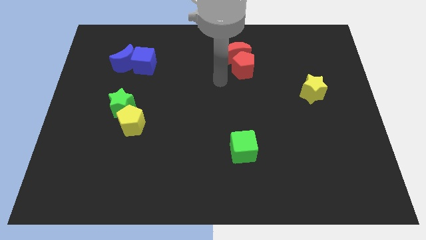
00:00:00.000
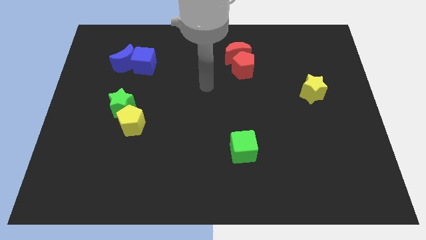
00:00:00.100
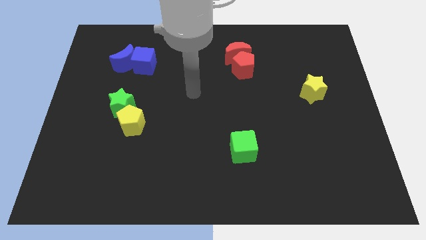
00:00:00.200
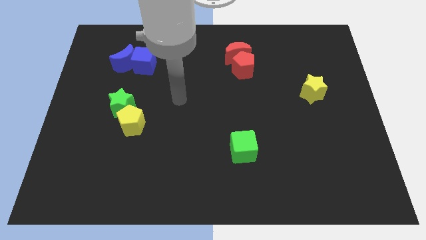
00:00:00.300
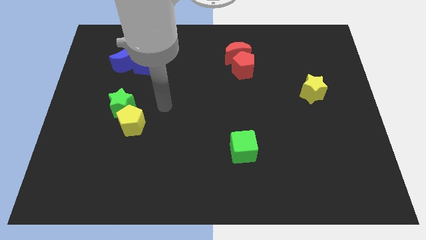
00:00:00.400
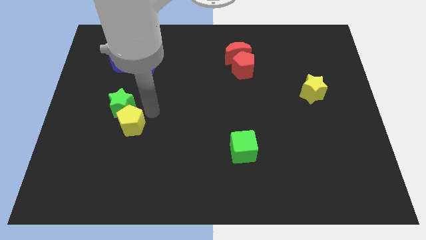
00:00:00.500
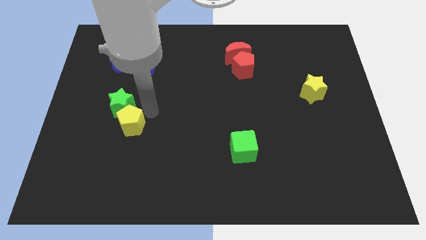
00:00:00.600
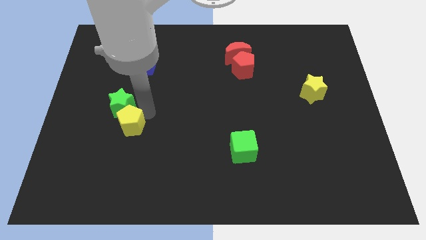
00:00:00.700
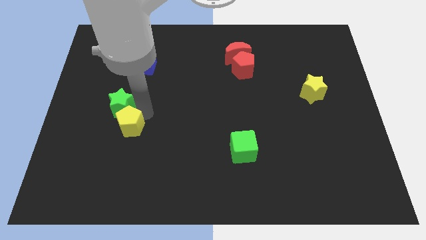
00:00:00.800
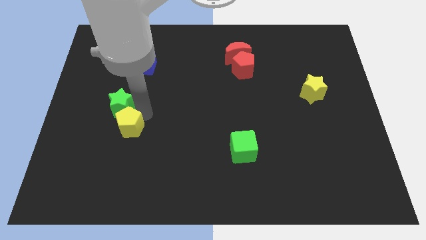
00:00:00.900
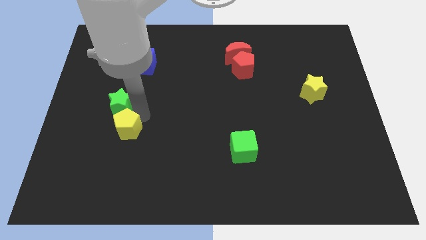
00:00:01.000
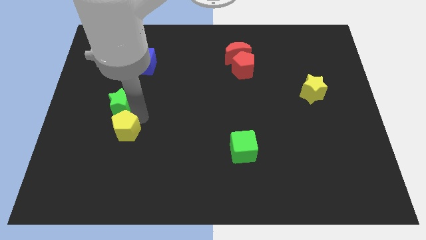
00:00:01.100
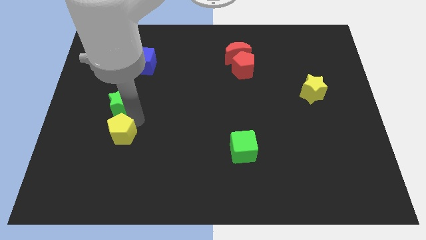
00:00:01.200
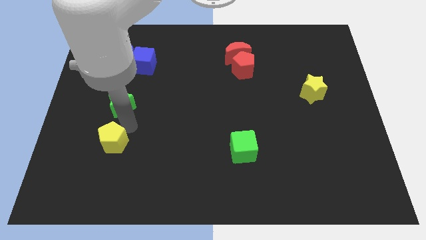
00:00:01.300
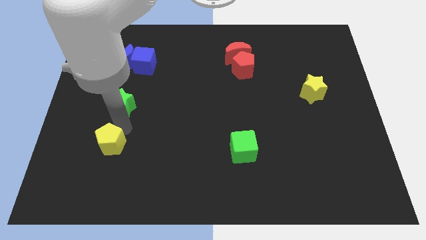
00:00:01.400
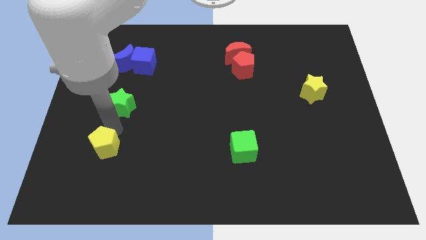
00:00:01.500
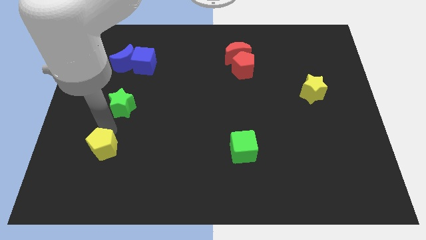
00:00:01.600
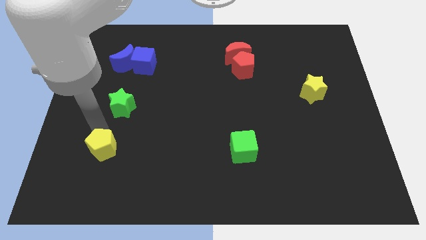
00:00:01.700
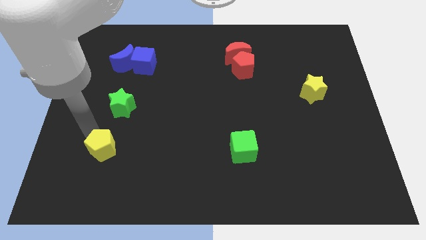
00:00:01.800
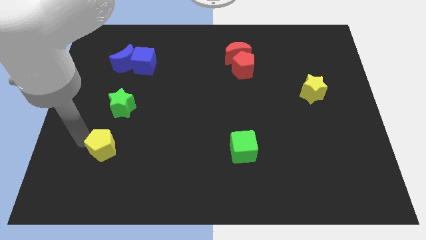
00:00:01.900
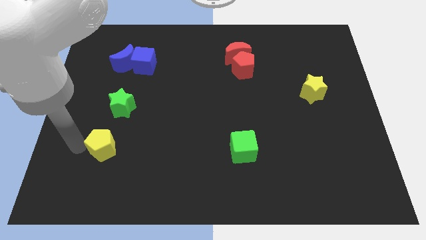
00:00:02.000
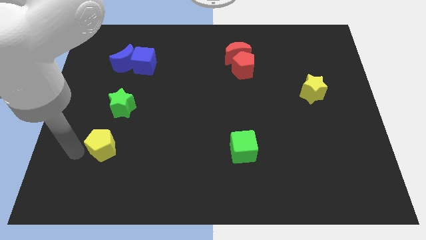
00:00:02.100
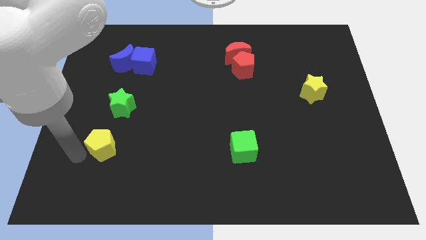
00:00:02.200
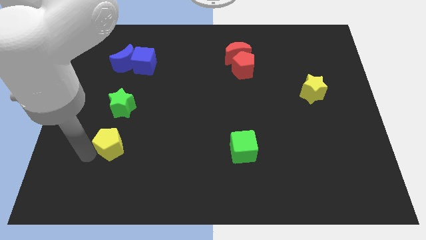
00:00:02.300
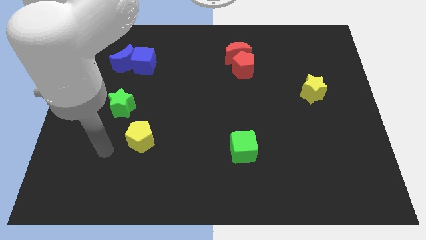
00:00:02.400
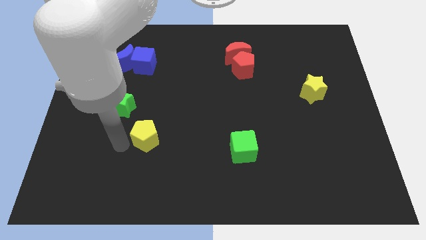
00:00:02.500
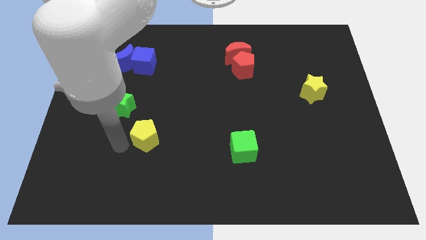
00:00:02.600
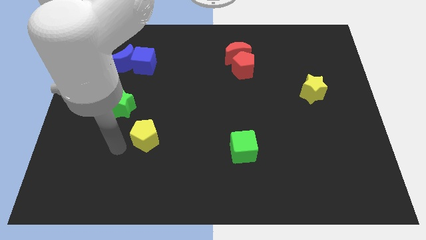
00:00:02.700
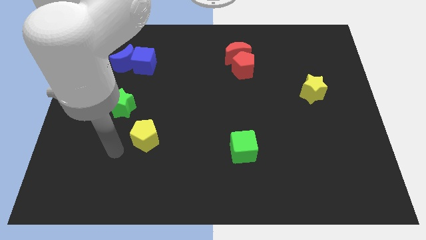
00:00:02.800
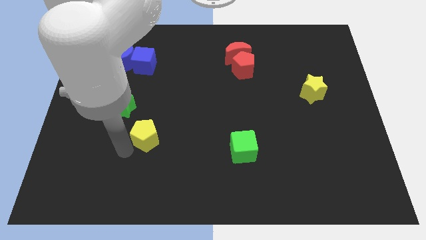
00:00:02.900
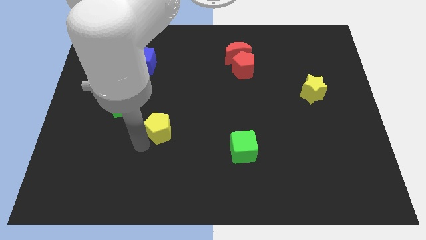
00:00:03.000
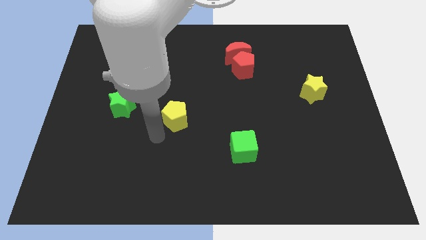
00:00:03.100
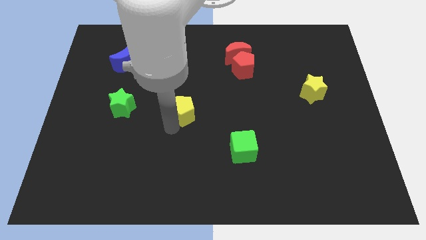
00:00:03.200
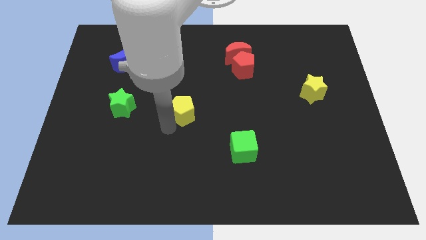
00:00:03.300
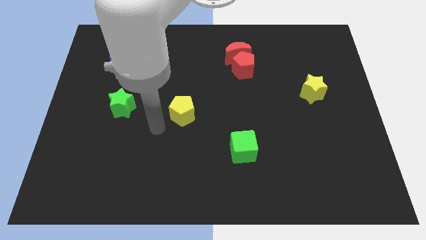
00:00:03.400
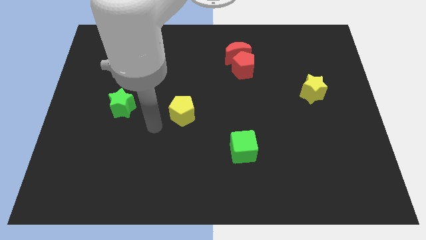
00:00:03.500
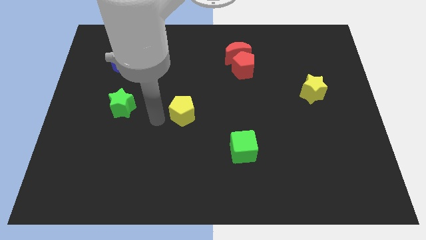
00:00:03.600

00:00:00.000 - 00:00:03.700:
move the yellow pentagon to the center of the board

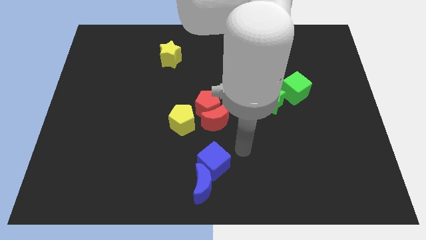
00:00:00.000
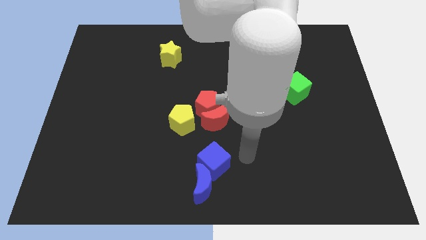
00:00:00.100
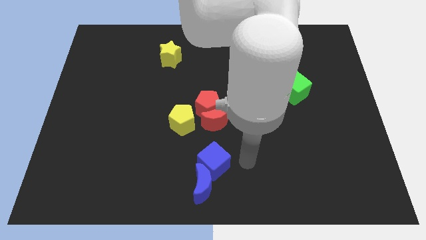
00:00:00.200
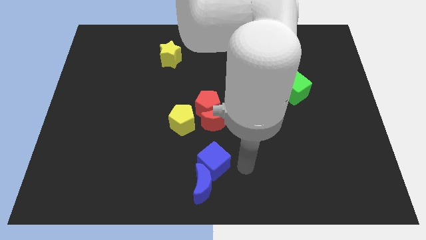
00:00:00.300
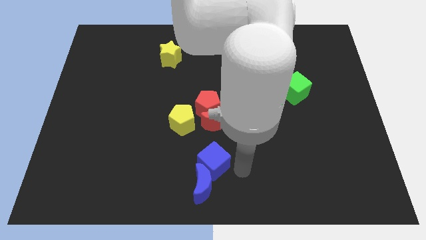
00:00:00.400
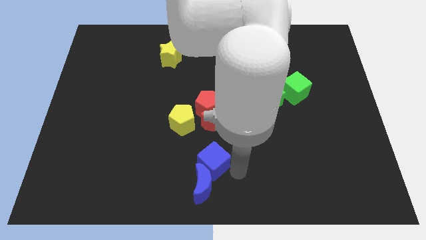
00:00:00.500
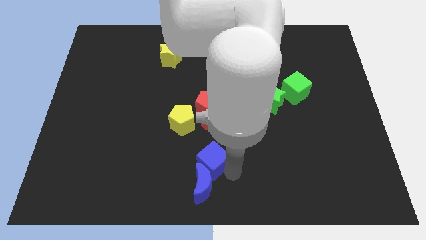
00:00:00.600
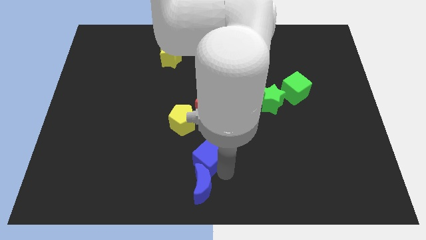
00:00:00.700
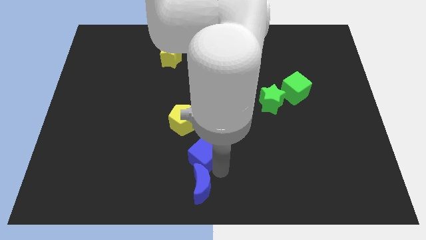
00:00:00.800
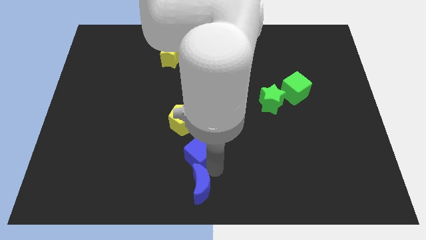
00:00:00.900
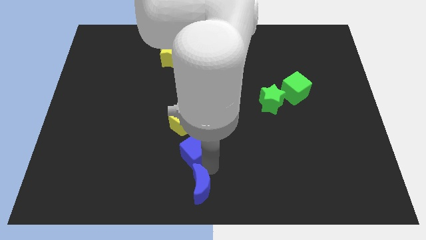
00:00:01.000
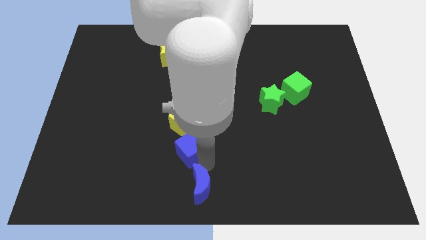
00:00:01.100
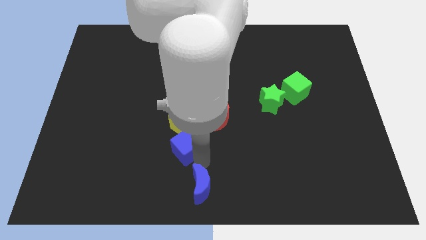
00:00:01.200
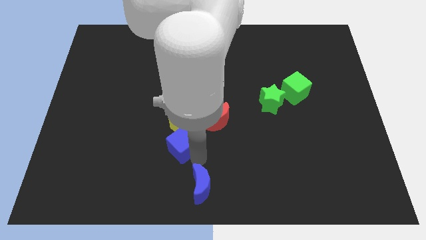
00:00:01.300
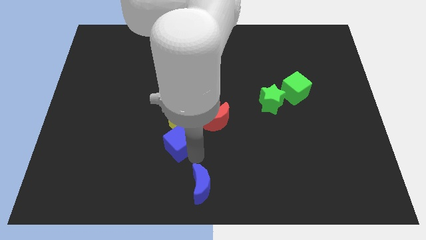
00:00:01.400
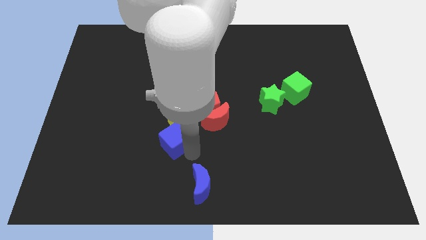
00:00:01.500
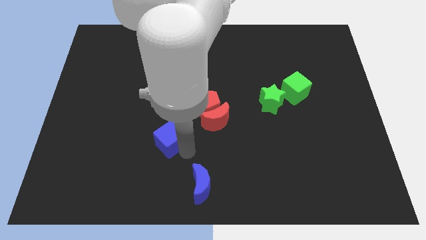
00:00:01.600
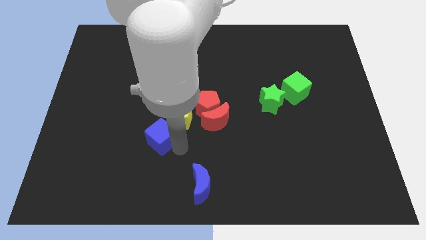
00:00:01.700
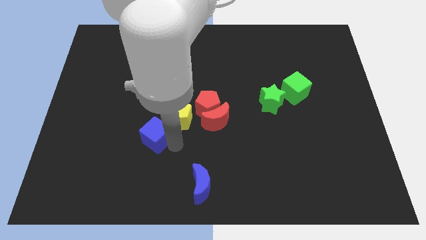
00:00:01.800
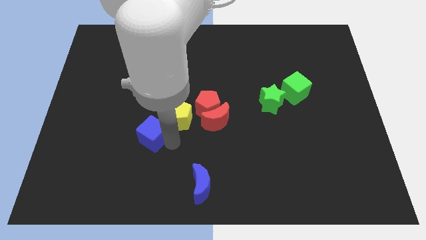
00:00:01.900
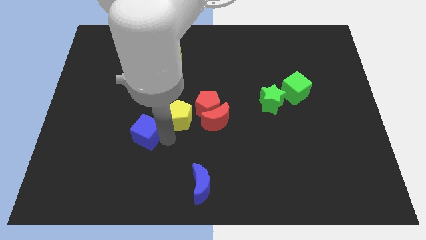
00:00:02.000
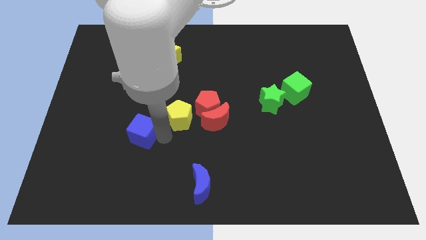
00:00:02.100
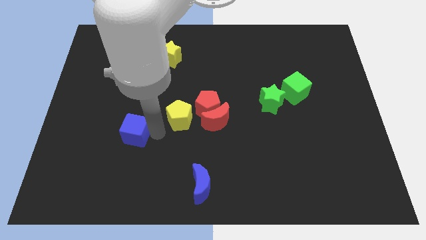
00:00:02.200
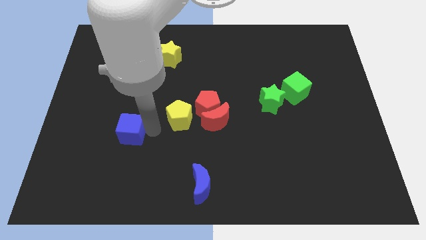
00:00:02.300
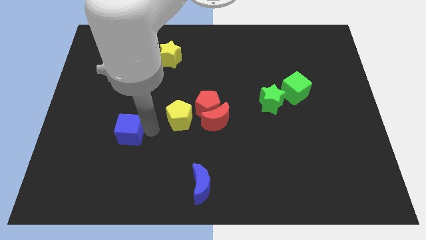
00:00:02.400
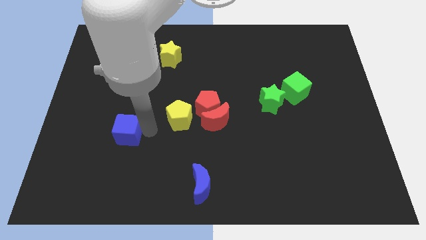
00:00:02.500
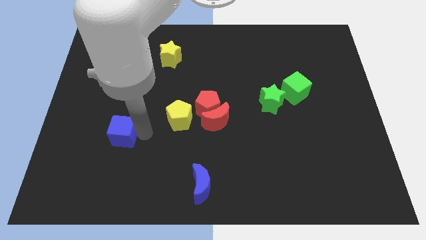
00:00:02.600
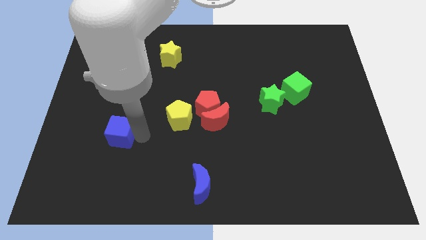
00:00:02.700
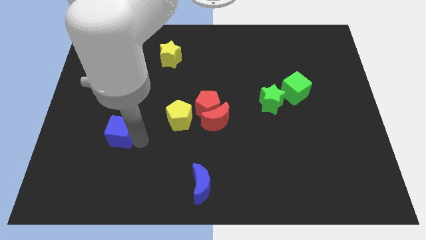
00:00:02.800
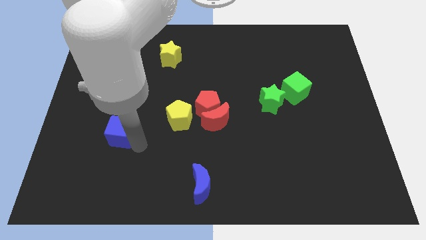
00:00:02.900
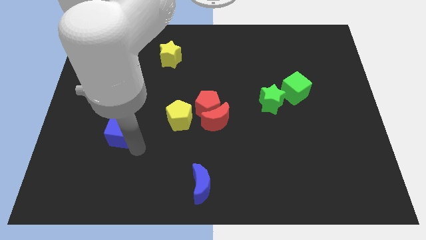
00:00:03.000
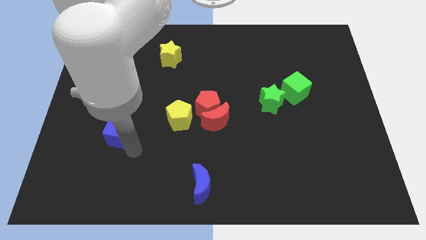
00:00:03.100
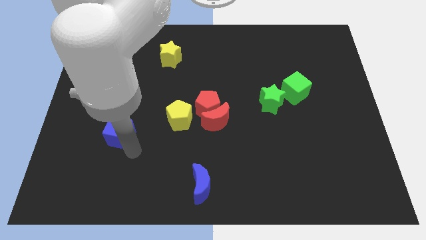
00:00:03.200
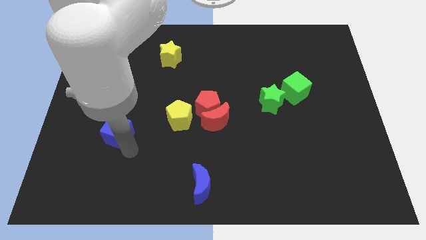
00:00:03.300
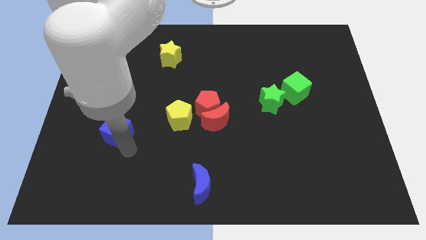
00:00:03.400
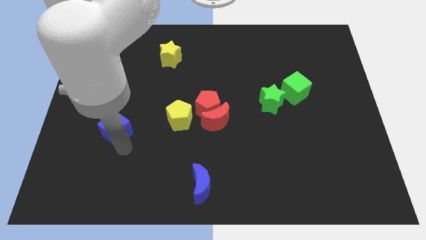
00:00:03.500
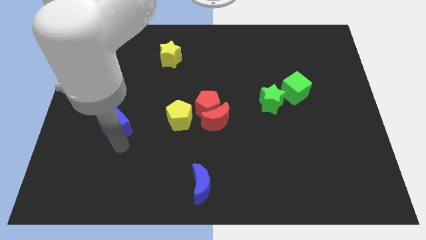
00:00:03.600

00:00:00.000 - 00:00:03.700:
separate the blue cube from the blue crescent

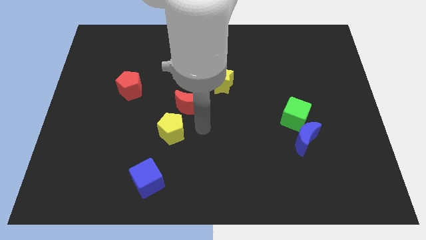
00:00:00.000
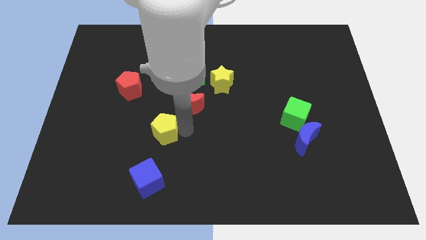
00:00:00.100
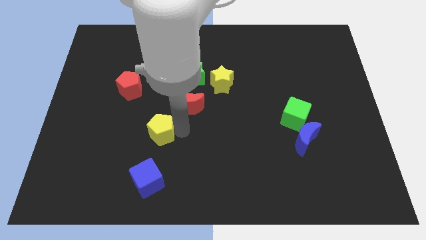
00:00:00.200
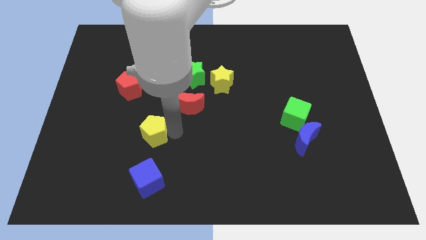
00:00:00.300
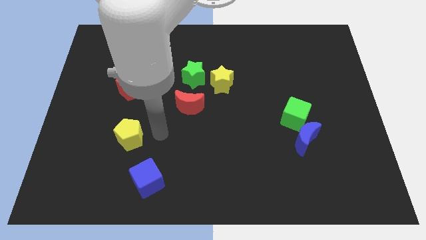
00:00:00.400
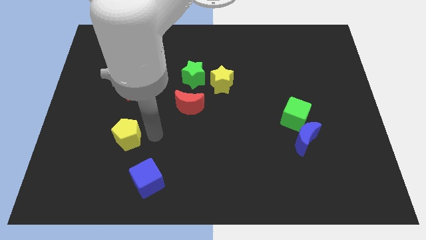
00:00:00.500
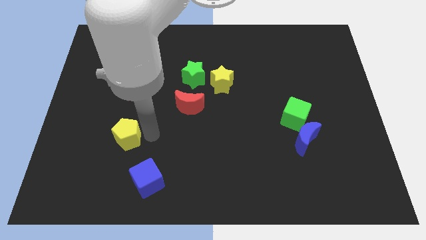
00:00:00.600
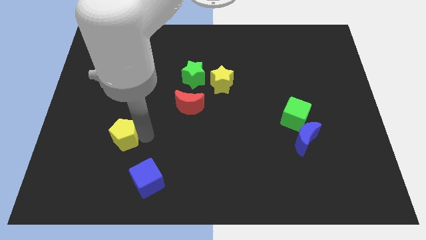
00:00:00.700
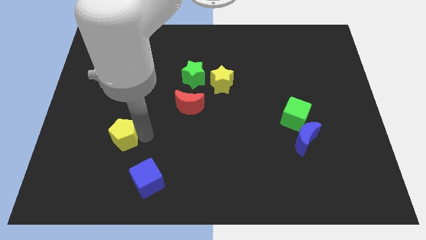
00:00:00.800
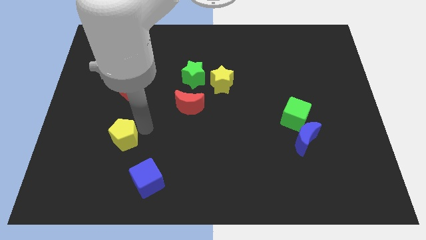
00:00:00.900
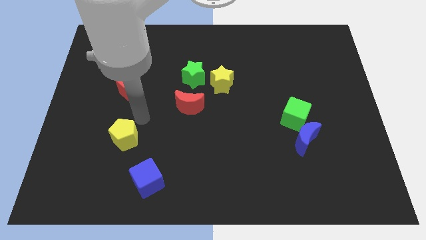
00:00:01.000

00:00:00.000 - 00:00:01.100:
push the yellow pentagon to the bottom of the red pentagon

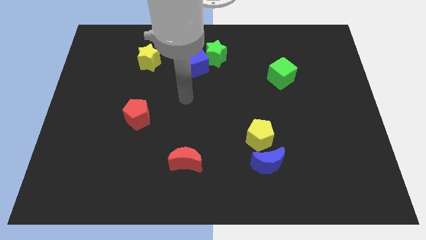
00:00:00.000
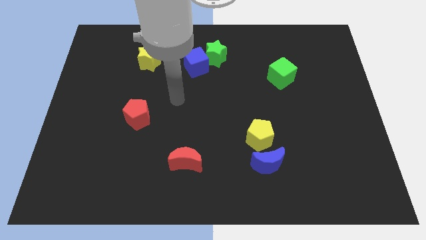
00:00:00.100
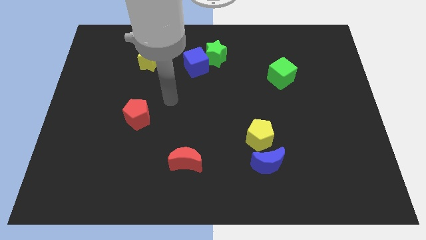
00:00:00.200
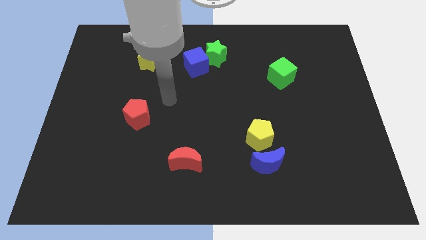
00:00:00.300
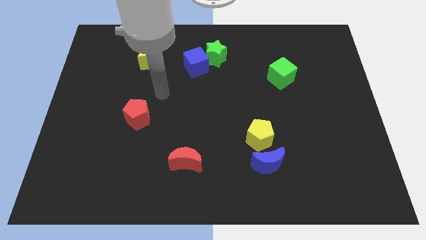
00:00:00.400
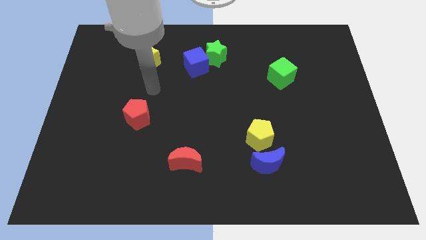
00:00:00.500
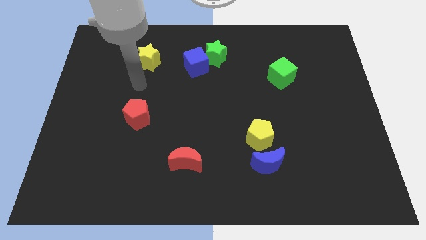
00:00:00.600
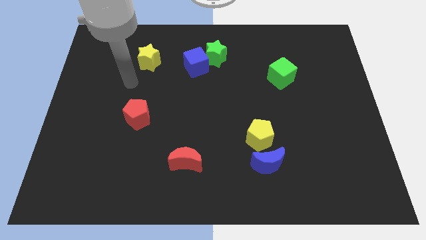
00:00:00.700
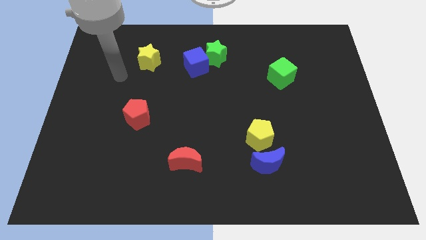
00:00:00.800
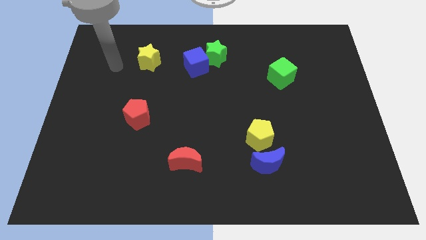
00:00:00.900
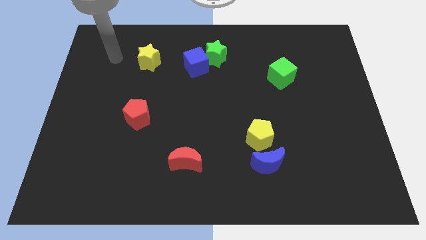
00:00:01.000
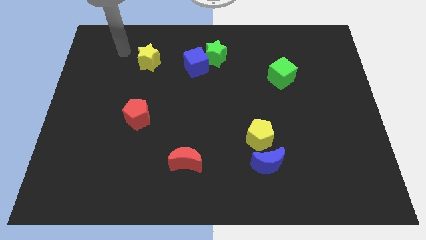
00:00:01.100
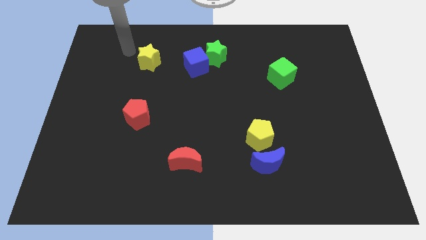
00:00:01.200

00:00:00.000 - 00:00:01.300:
point your hand at the left side of the yellow star
